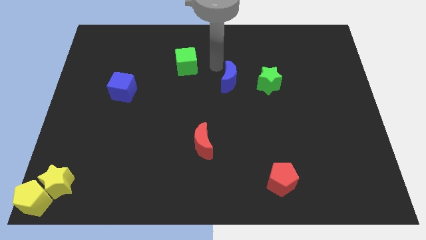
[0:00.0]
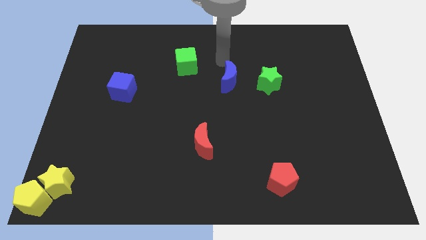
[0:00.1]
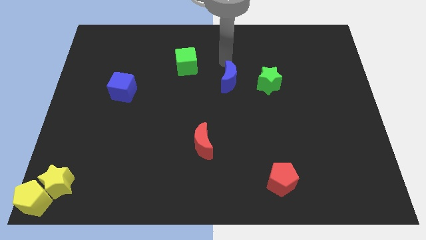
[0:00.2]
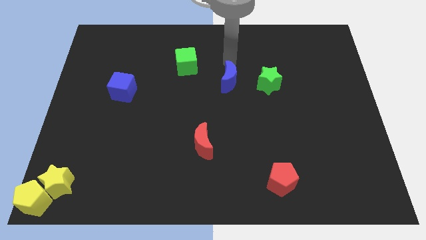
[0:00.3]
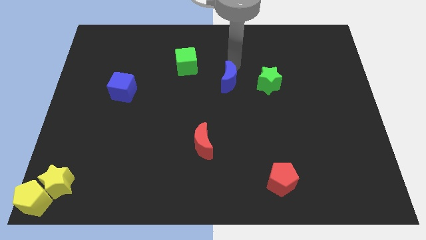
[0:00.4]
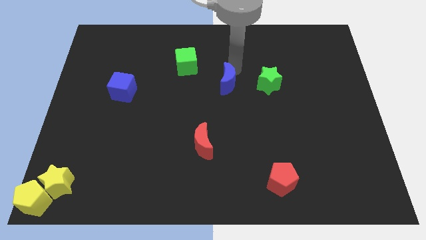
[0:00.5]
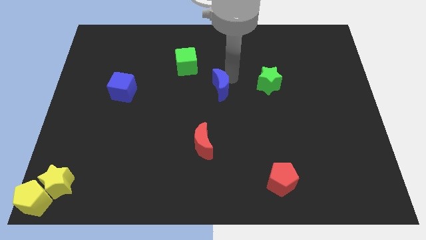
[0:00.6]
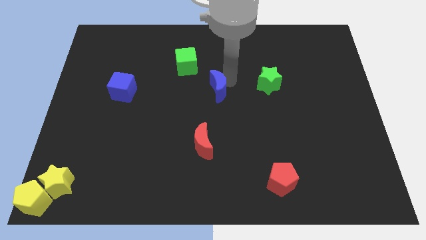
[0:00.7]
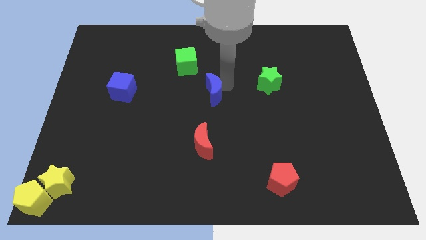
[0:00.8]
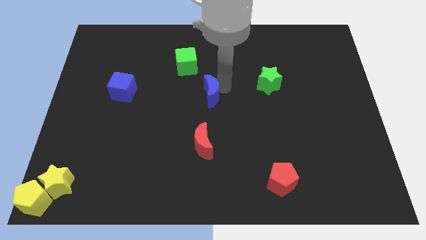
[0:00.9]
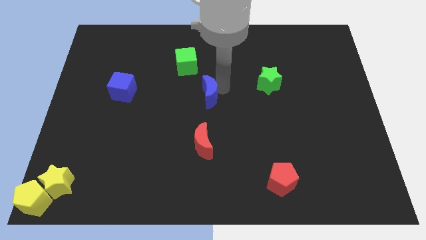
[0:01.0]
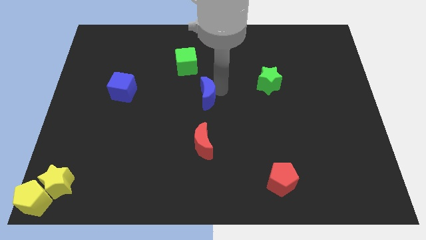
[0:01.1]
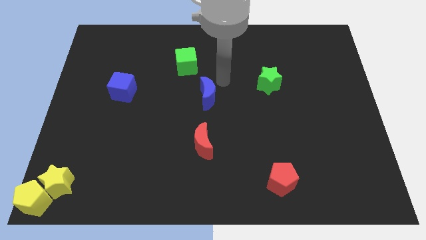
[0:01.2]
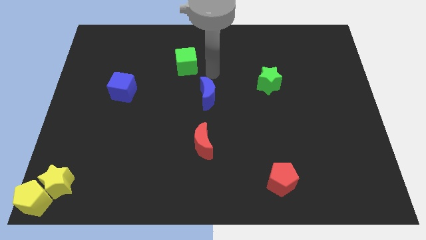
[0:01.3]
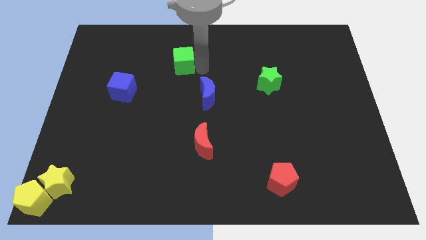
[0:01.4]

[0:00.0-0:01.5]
push the blue crescent towards the center

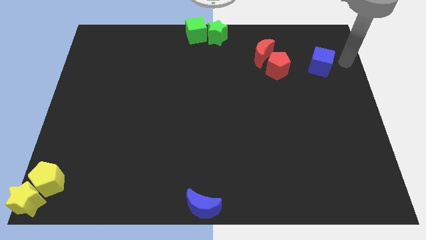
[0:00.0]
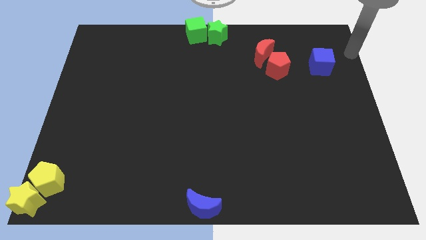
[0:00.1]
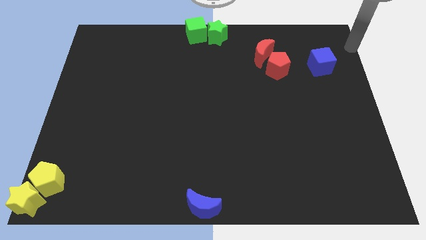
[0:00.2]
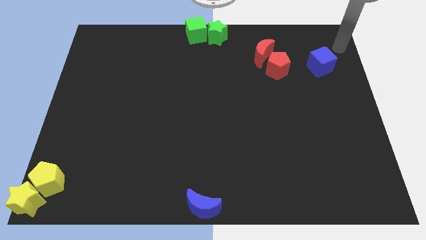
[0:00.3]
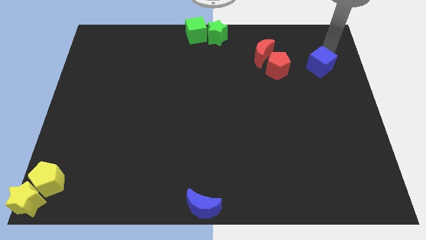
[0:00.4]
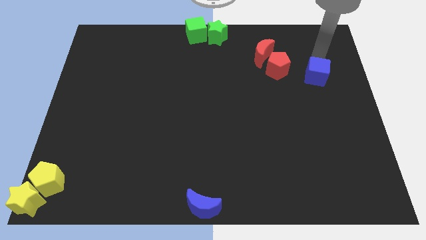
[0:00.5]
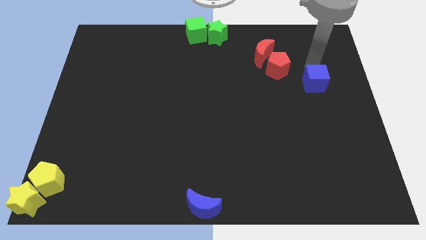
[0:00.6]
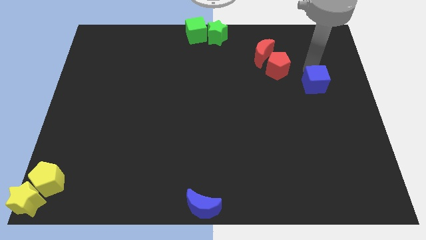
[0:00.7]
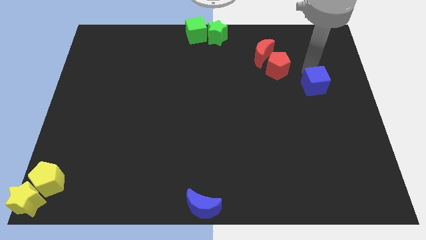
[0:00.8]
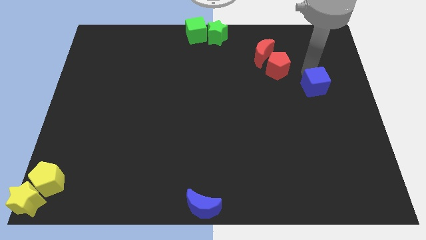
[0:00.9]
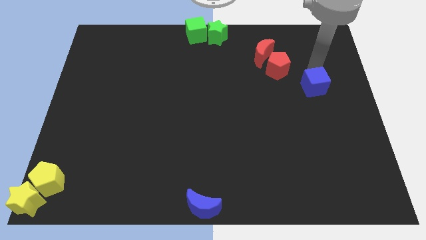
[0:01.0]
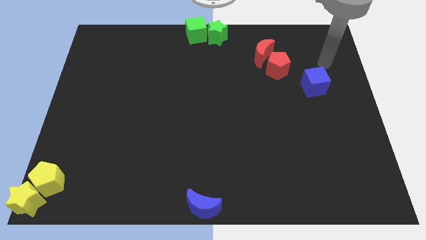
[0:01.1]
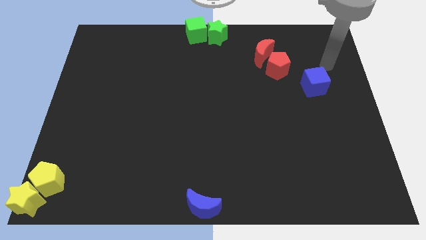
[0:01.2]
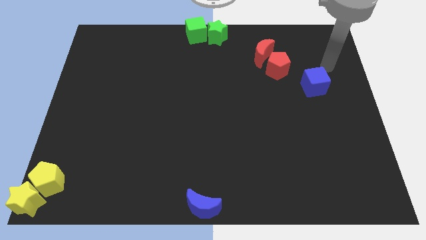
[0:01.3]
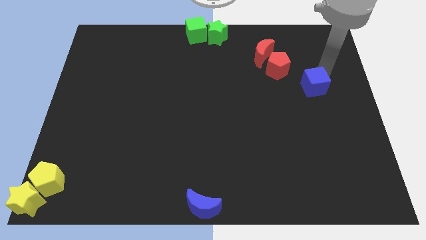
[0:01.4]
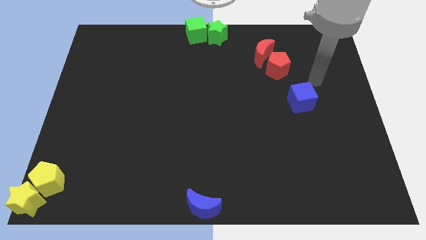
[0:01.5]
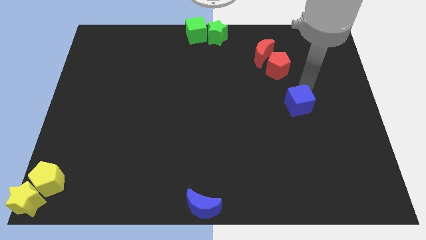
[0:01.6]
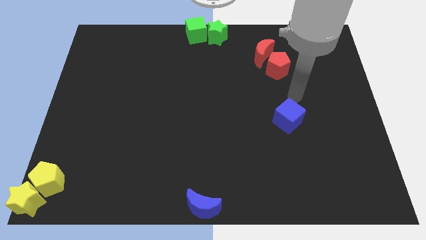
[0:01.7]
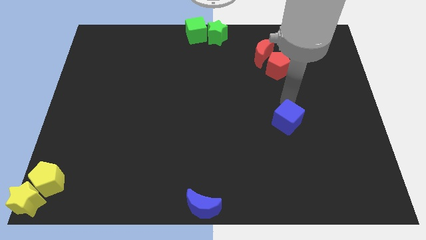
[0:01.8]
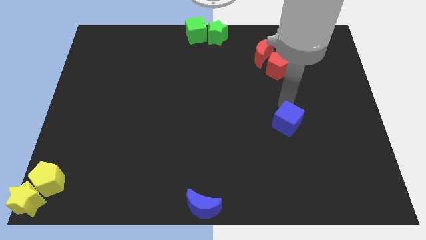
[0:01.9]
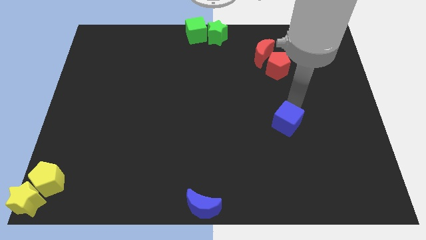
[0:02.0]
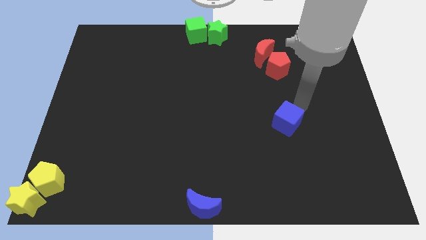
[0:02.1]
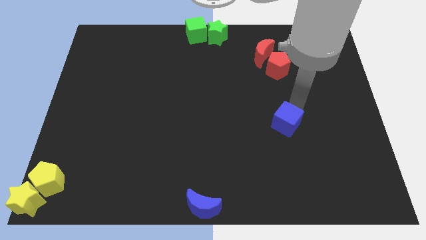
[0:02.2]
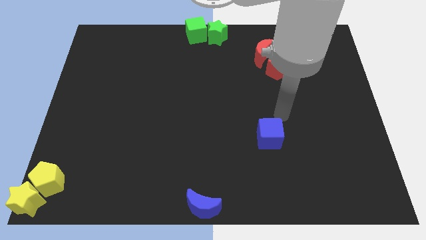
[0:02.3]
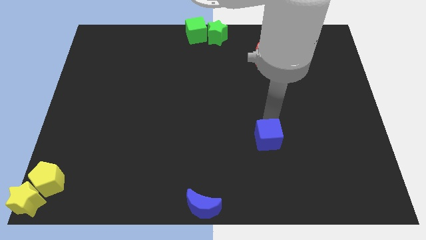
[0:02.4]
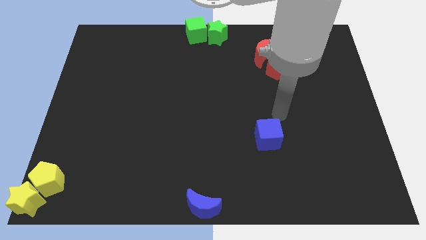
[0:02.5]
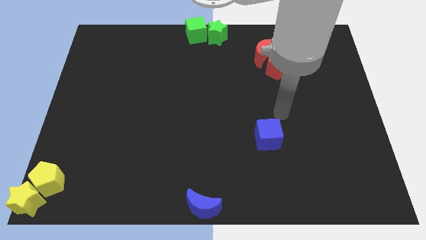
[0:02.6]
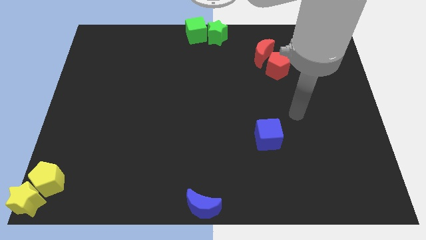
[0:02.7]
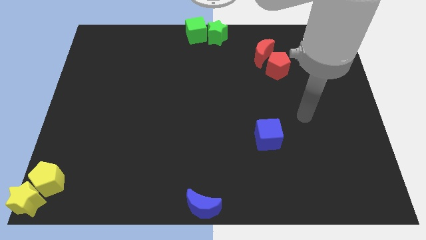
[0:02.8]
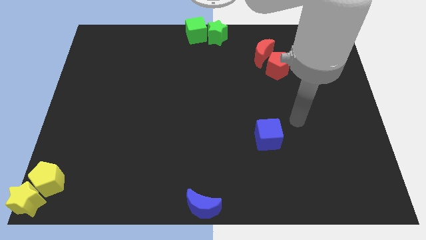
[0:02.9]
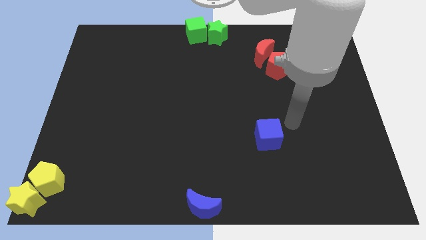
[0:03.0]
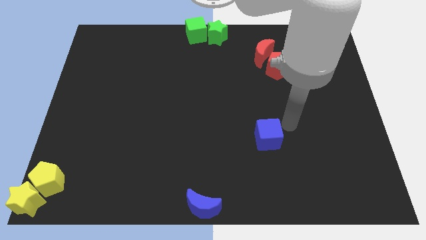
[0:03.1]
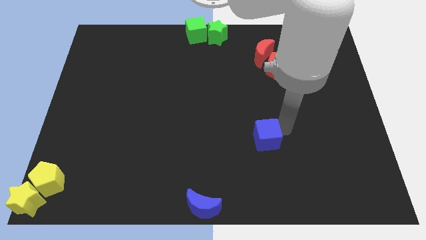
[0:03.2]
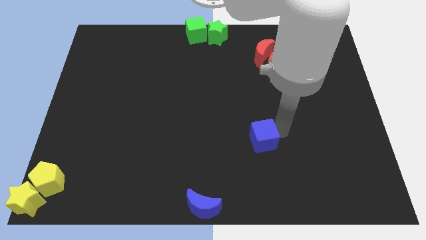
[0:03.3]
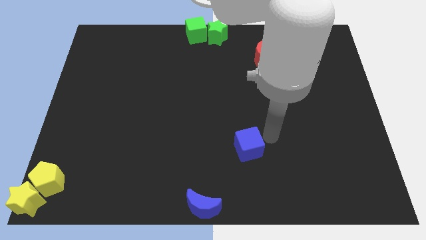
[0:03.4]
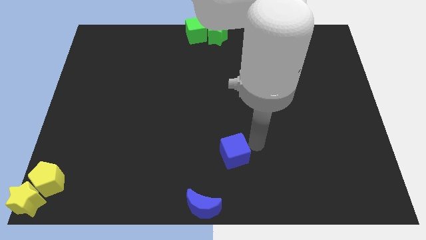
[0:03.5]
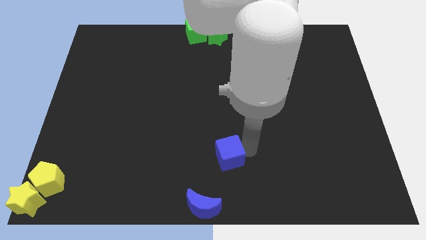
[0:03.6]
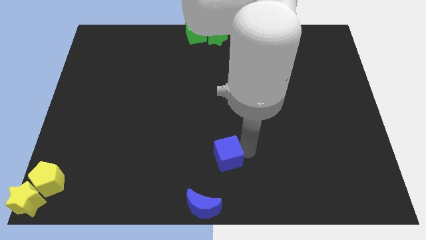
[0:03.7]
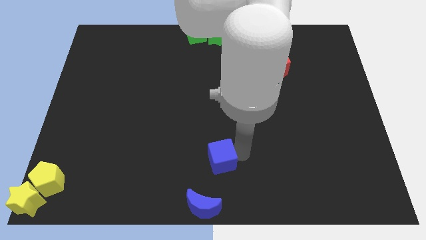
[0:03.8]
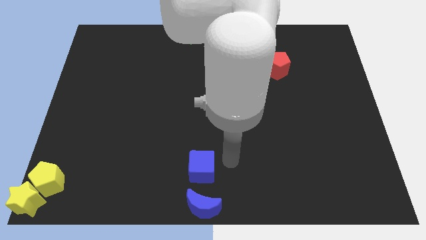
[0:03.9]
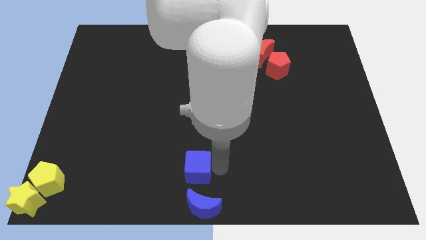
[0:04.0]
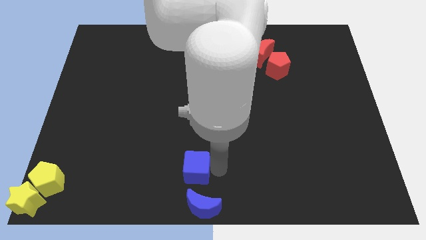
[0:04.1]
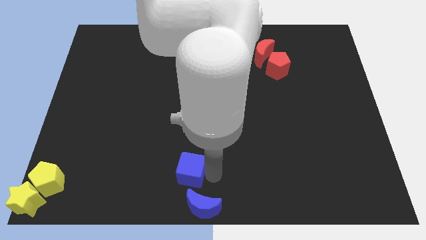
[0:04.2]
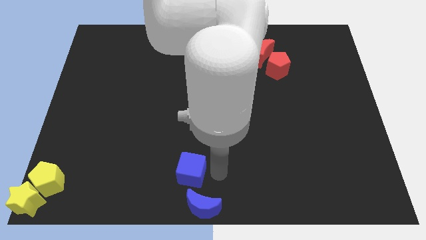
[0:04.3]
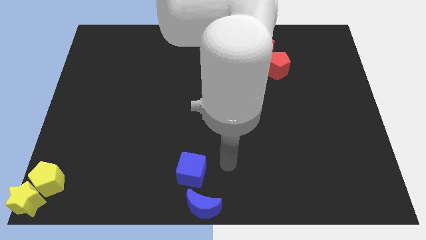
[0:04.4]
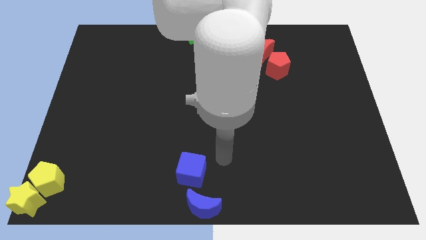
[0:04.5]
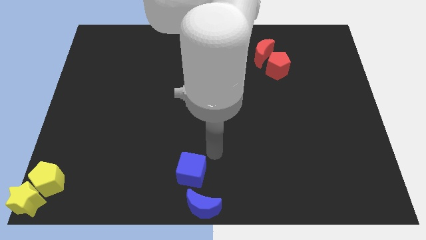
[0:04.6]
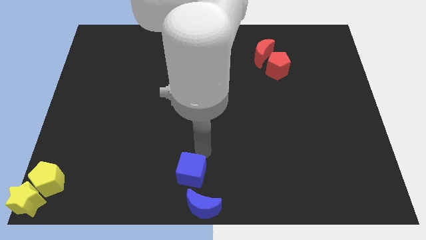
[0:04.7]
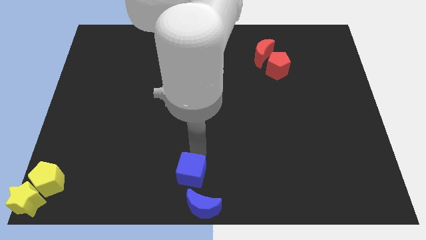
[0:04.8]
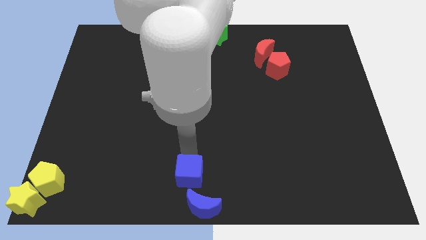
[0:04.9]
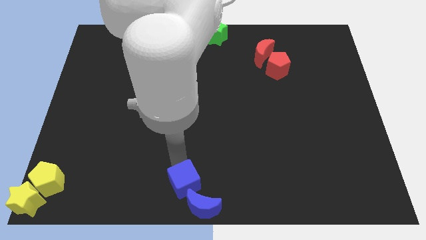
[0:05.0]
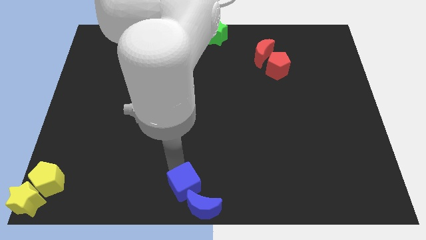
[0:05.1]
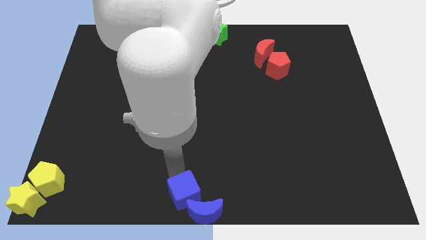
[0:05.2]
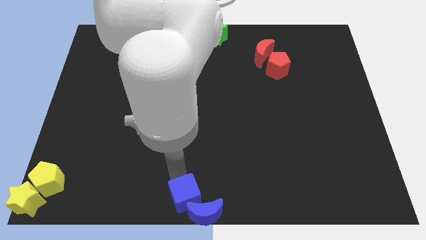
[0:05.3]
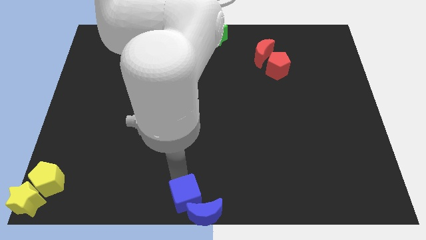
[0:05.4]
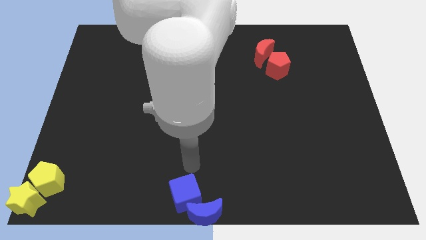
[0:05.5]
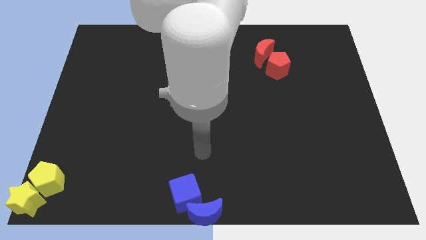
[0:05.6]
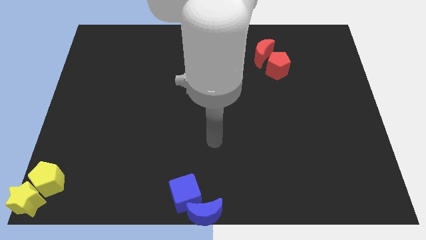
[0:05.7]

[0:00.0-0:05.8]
push the blue cube to the bottom center of the board

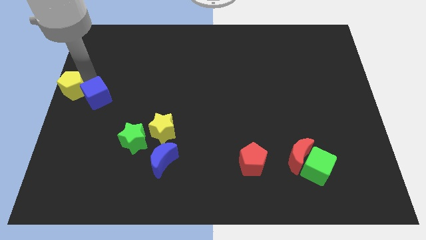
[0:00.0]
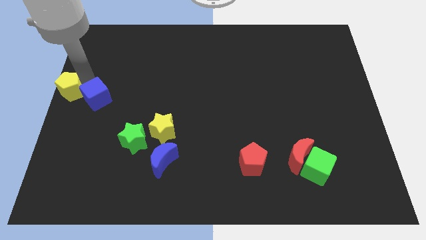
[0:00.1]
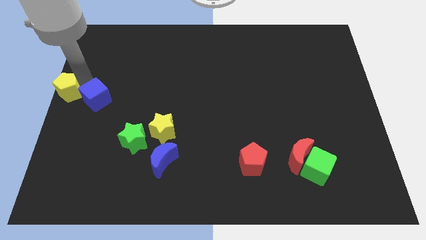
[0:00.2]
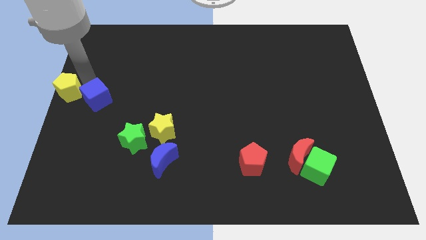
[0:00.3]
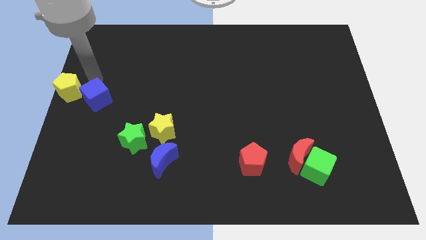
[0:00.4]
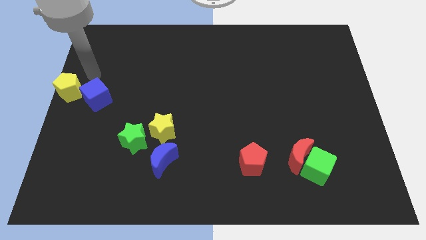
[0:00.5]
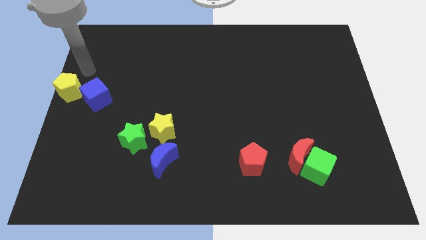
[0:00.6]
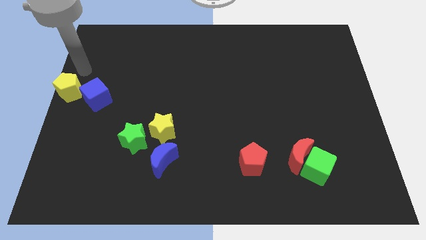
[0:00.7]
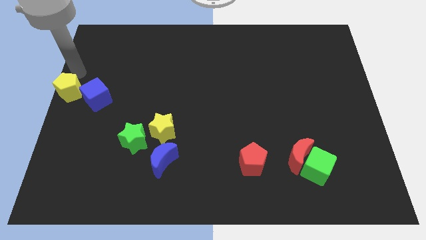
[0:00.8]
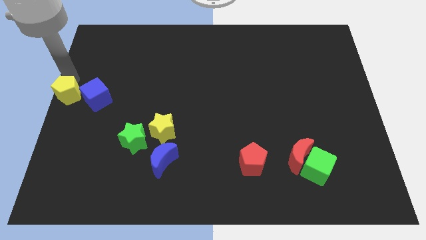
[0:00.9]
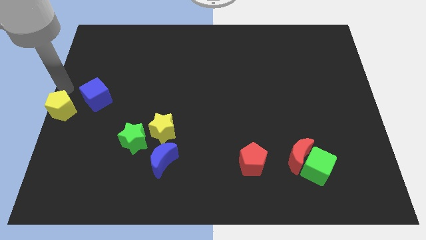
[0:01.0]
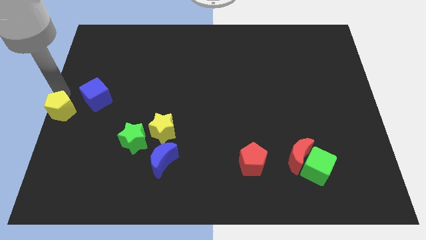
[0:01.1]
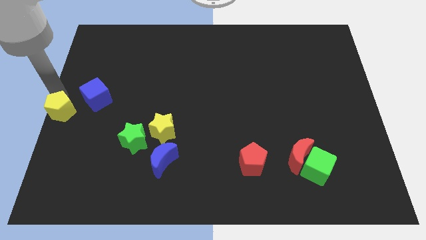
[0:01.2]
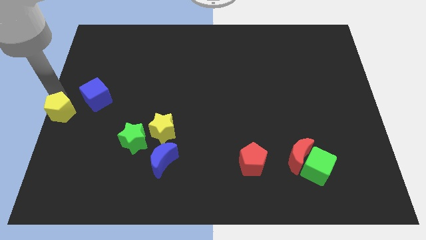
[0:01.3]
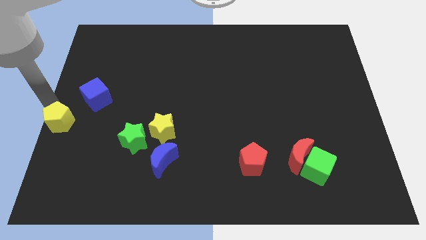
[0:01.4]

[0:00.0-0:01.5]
separate the yellow pentagon and blue cube

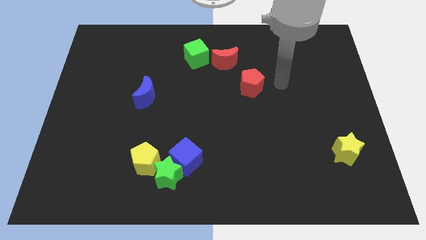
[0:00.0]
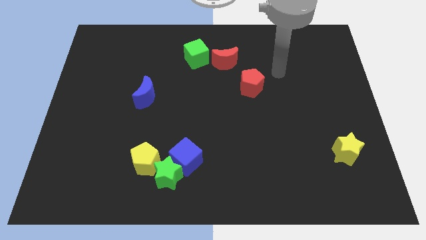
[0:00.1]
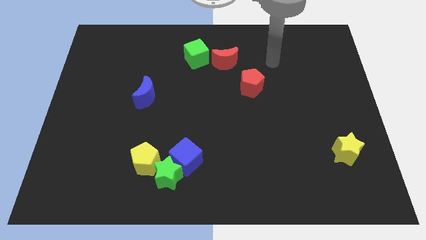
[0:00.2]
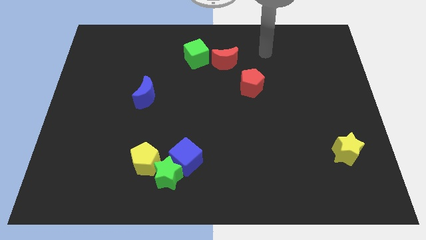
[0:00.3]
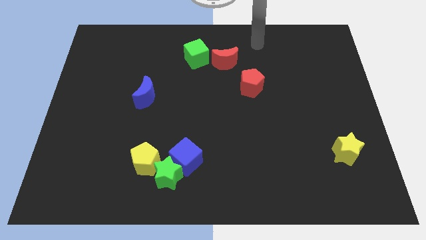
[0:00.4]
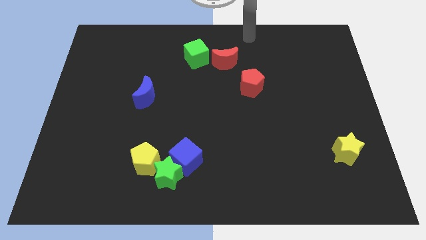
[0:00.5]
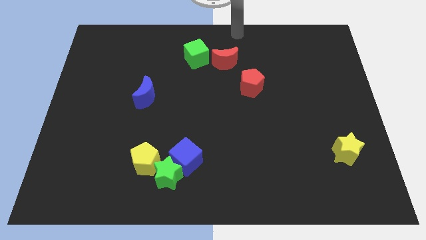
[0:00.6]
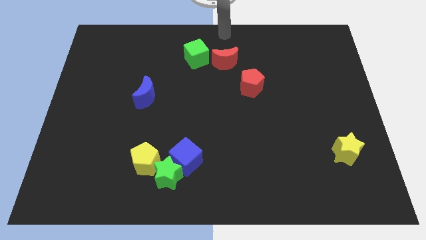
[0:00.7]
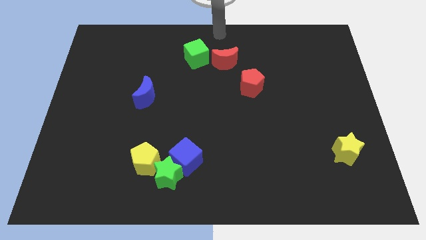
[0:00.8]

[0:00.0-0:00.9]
point your arm at the top center of the board
